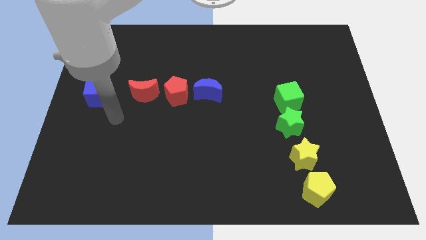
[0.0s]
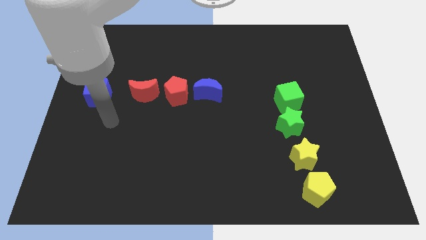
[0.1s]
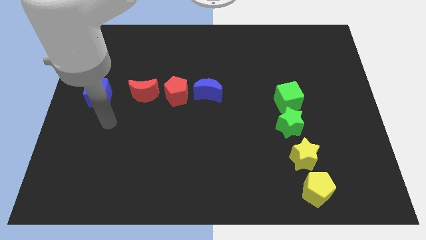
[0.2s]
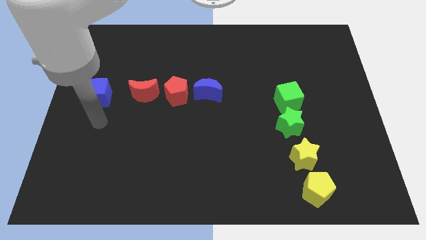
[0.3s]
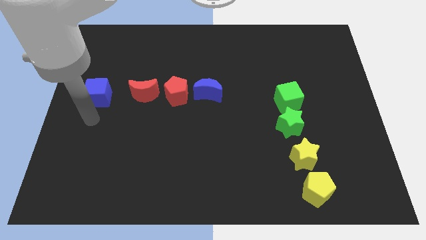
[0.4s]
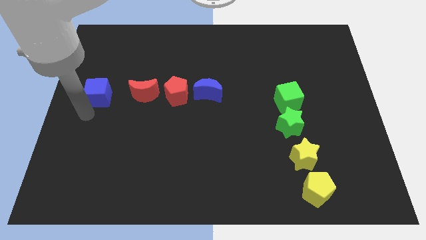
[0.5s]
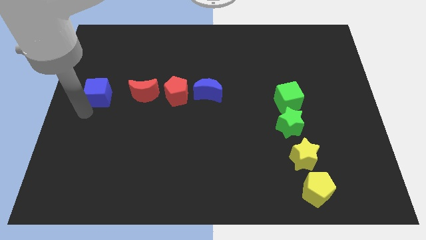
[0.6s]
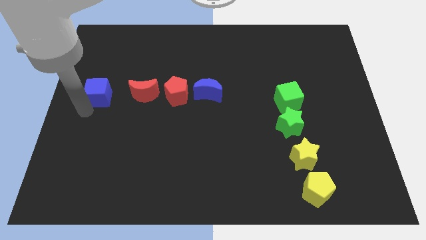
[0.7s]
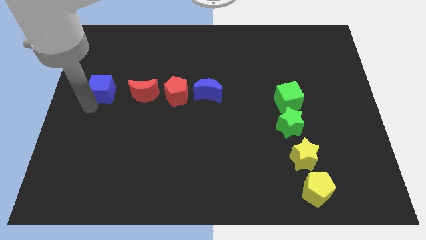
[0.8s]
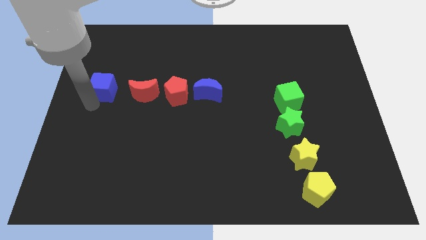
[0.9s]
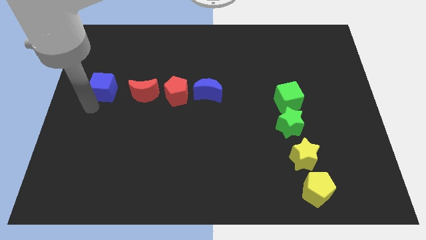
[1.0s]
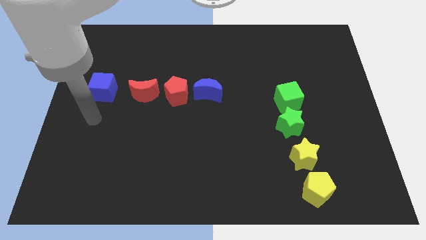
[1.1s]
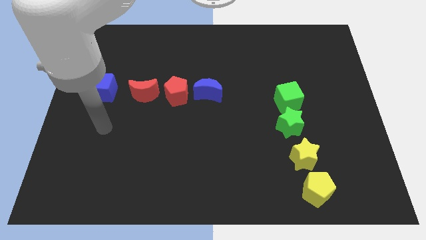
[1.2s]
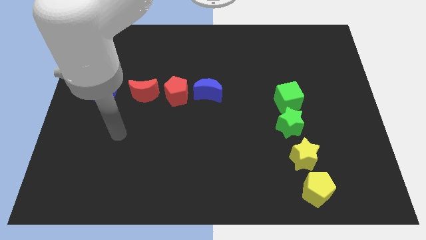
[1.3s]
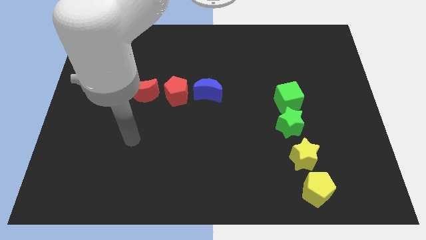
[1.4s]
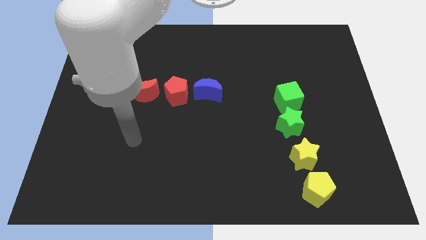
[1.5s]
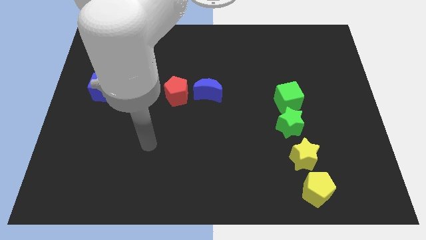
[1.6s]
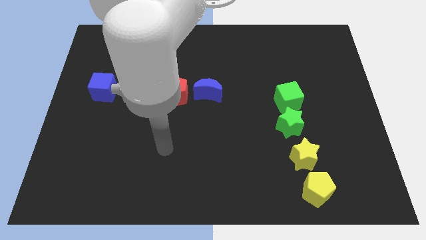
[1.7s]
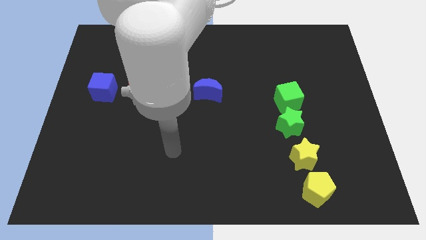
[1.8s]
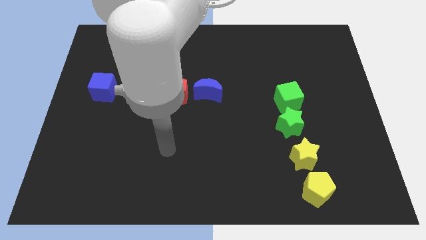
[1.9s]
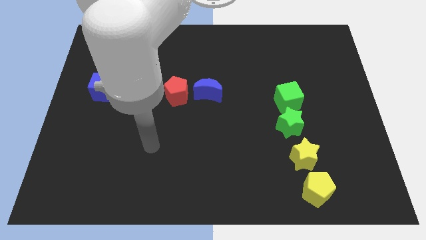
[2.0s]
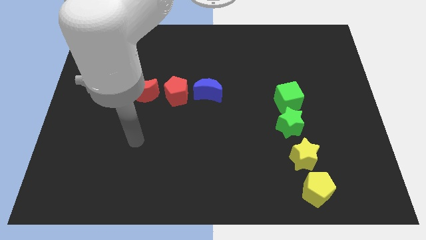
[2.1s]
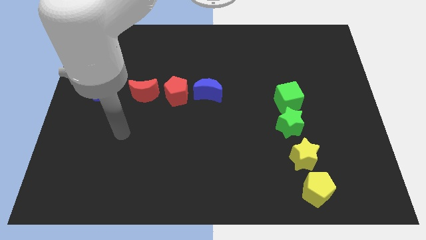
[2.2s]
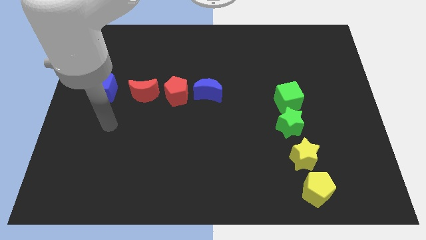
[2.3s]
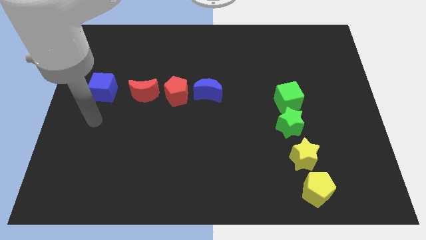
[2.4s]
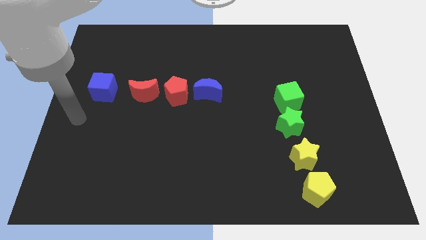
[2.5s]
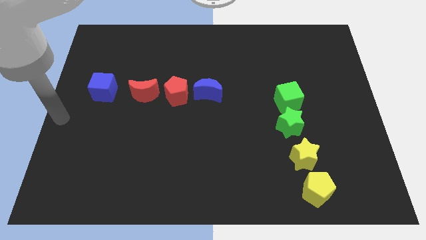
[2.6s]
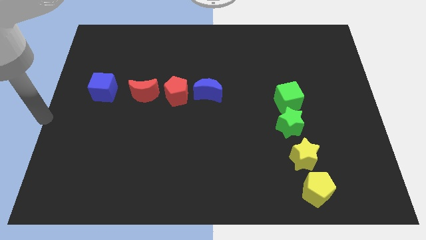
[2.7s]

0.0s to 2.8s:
tap the blue cube

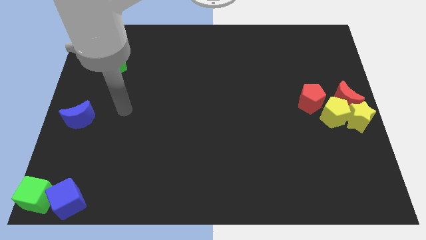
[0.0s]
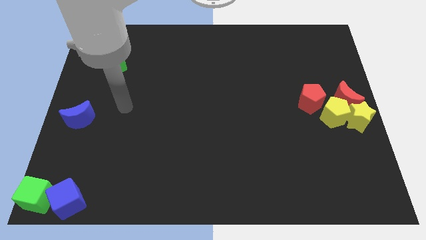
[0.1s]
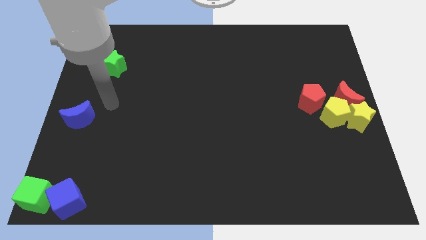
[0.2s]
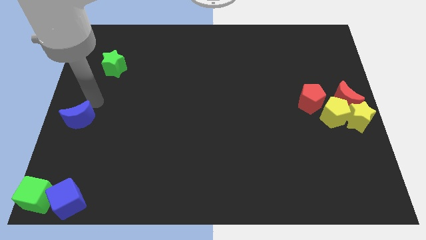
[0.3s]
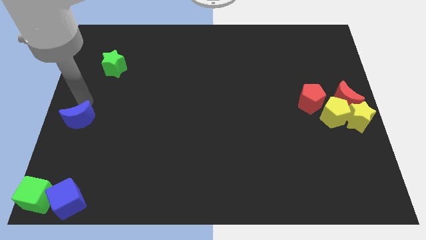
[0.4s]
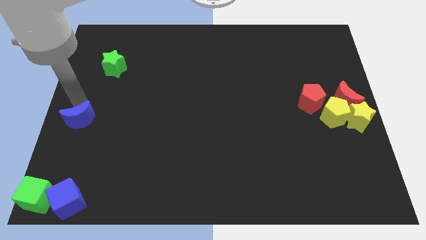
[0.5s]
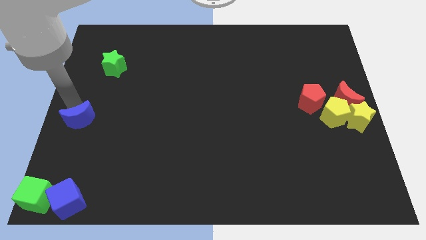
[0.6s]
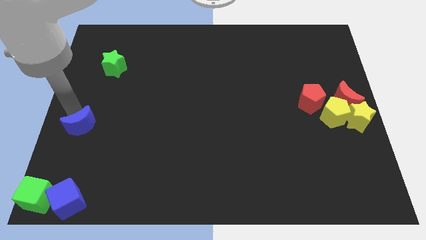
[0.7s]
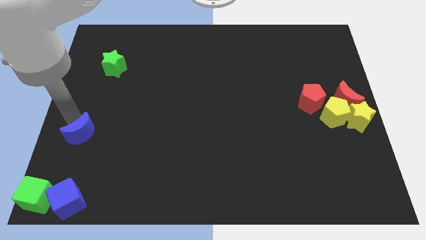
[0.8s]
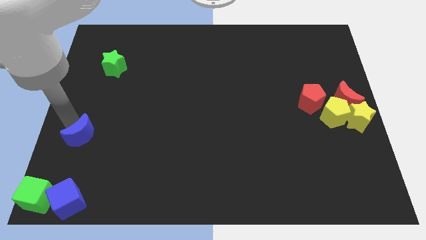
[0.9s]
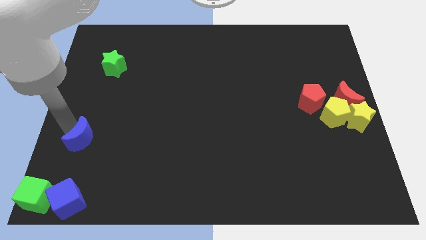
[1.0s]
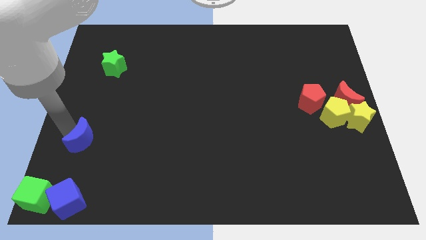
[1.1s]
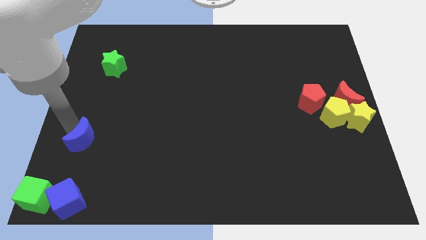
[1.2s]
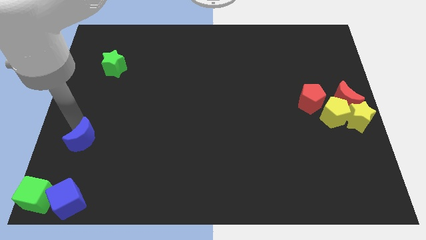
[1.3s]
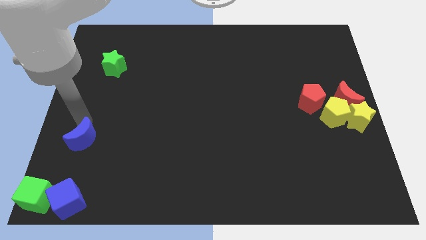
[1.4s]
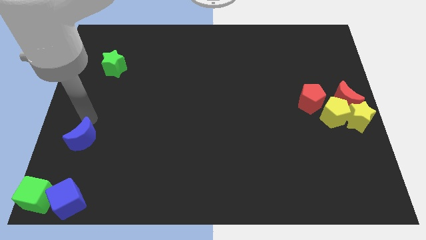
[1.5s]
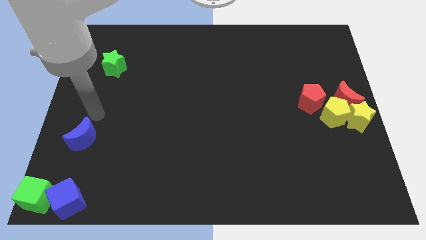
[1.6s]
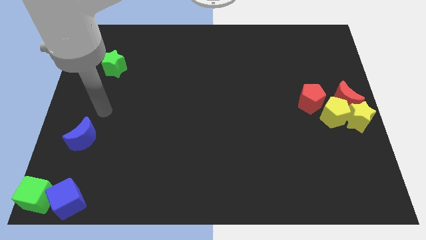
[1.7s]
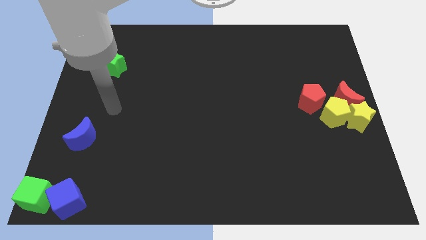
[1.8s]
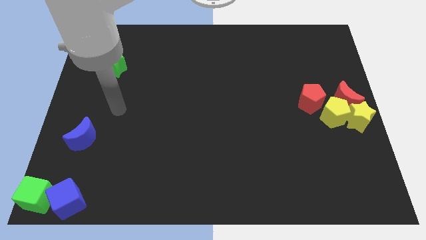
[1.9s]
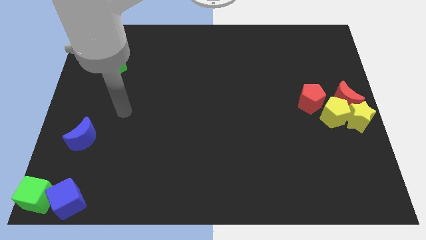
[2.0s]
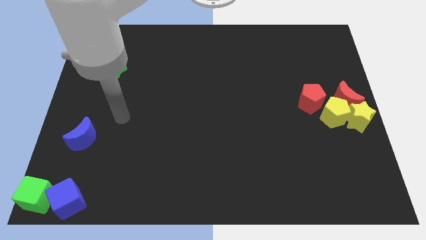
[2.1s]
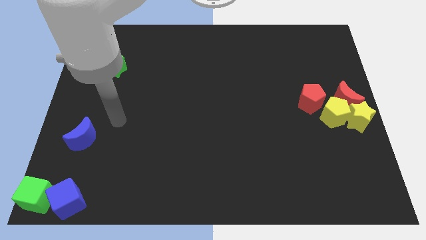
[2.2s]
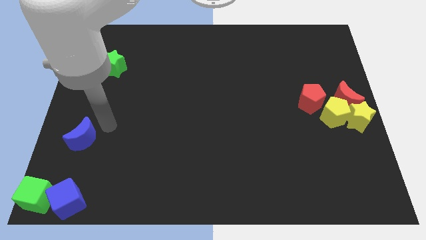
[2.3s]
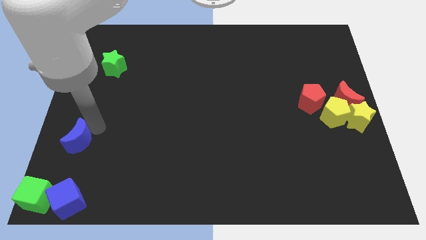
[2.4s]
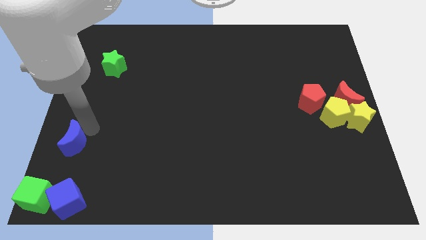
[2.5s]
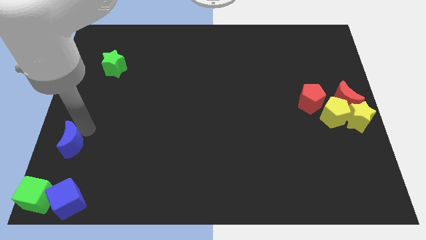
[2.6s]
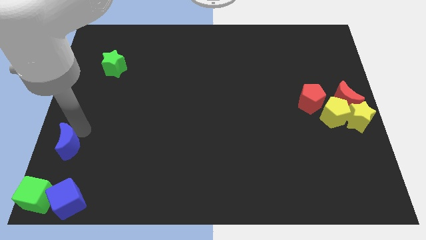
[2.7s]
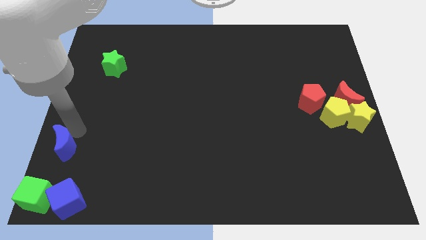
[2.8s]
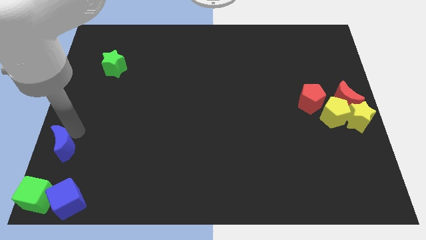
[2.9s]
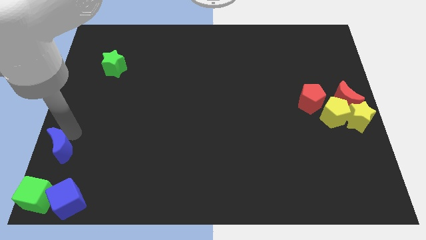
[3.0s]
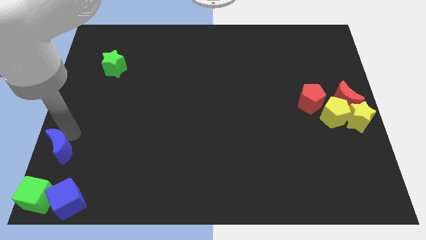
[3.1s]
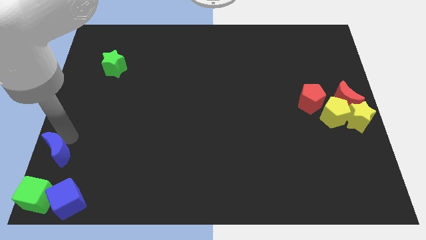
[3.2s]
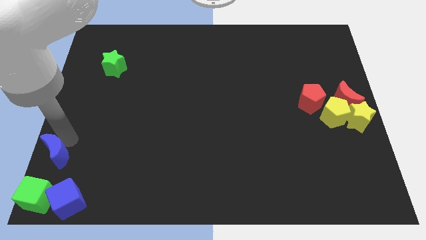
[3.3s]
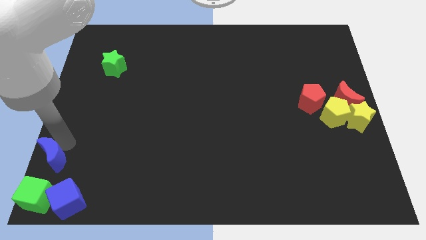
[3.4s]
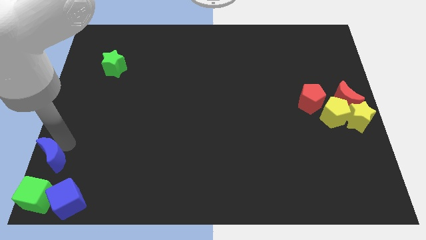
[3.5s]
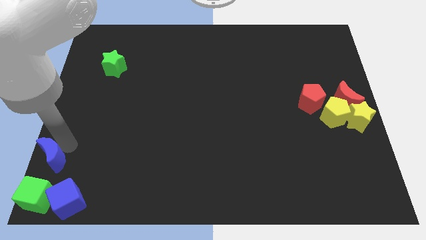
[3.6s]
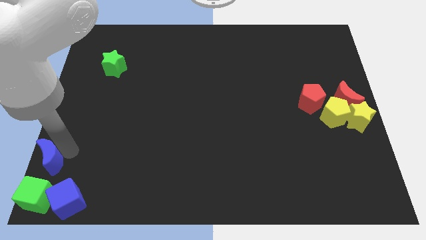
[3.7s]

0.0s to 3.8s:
slide the blue moon above the green cube

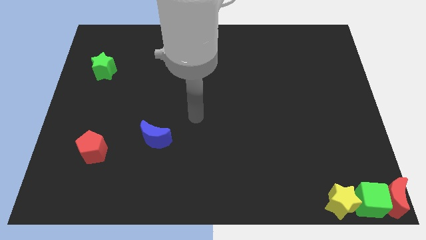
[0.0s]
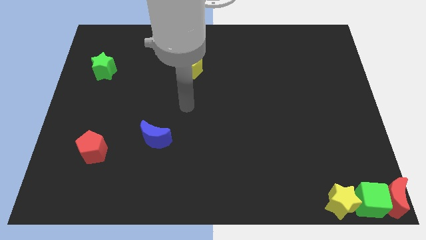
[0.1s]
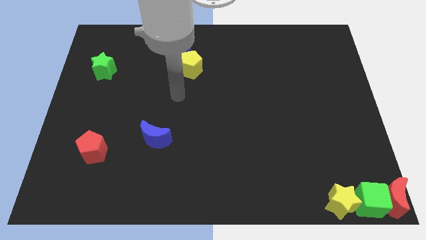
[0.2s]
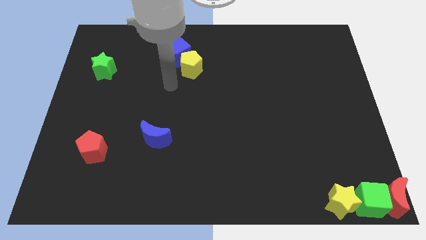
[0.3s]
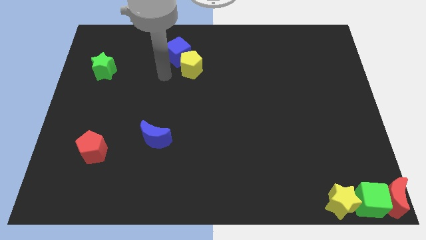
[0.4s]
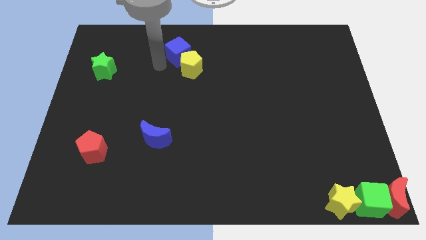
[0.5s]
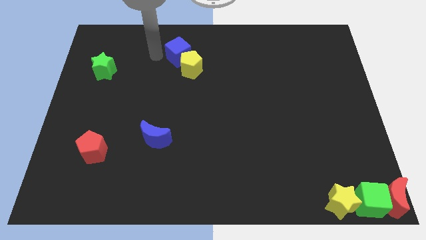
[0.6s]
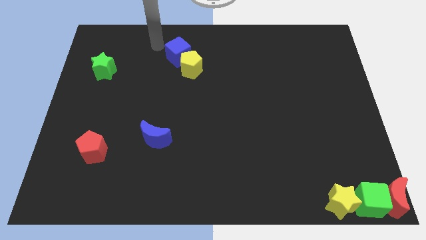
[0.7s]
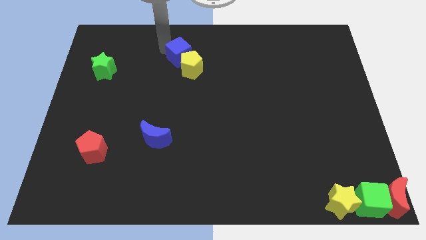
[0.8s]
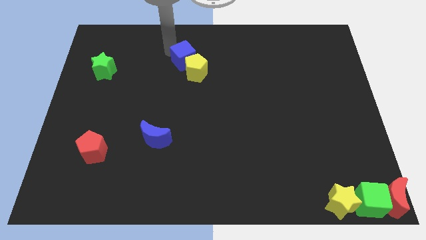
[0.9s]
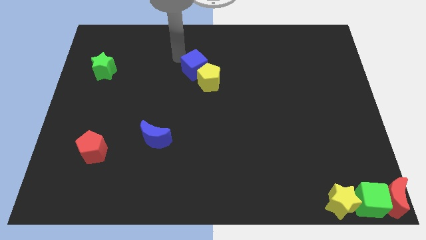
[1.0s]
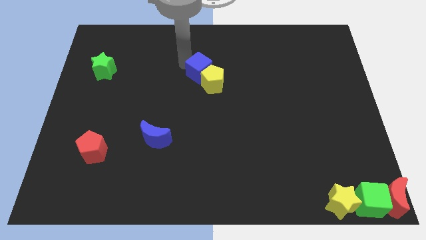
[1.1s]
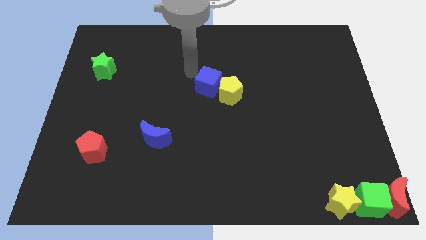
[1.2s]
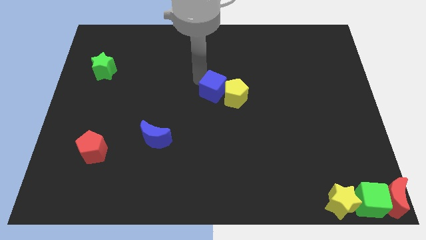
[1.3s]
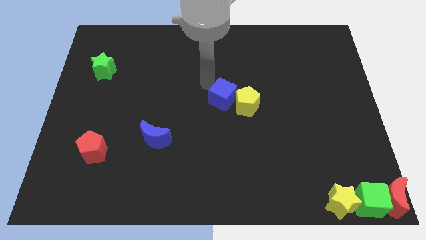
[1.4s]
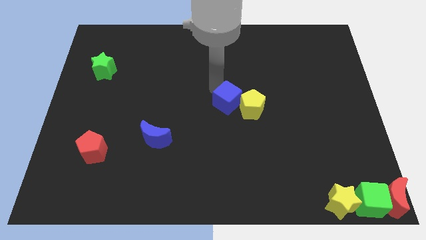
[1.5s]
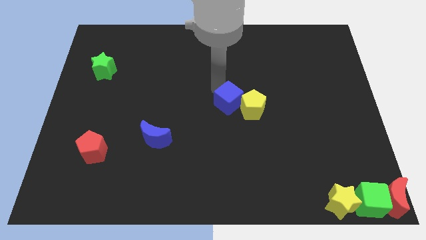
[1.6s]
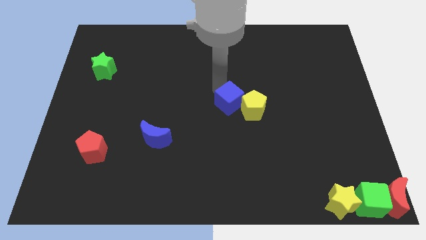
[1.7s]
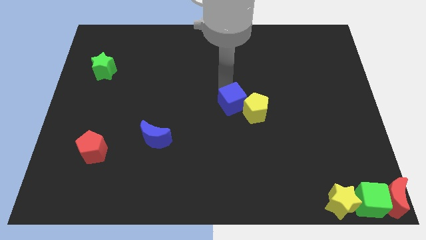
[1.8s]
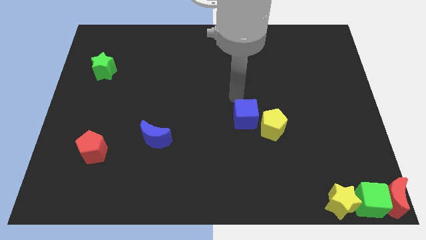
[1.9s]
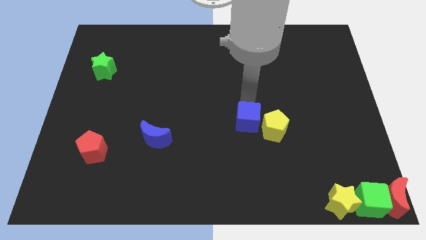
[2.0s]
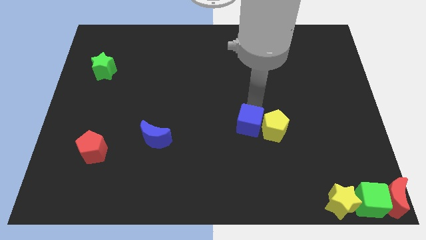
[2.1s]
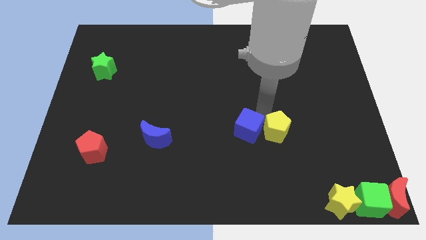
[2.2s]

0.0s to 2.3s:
move the blue cube and yellow pentagon to the horizontal right of the blue moon

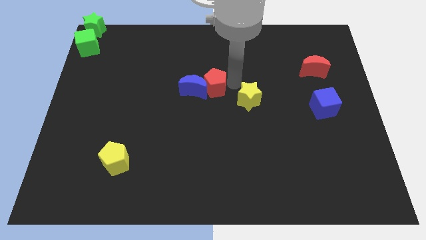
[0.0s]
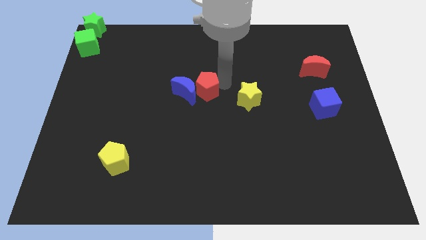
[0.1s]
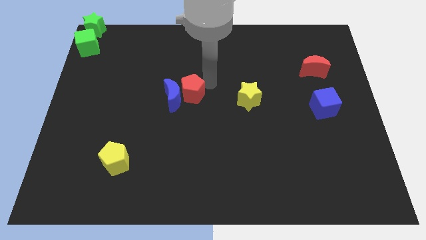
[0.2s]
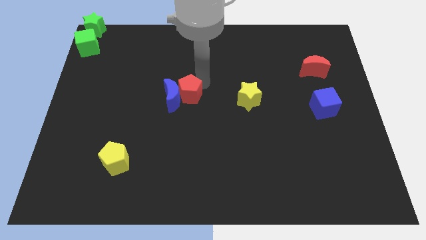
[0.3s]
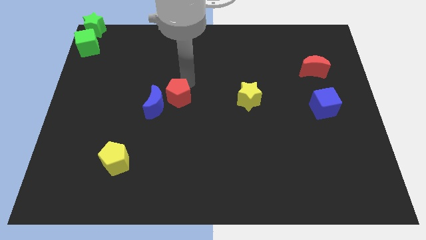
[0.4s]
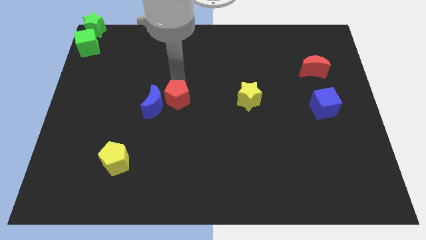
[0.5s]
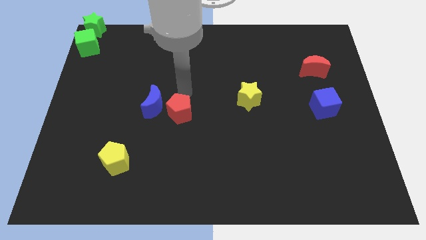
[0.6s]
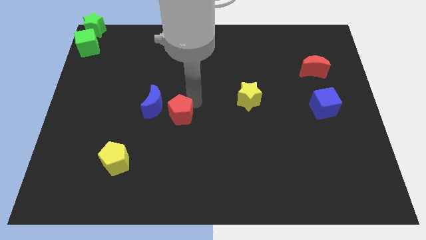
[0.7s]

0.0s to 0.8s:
slightly push the red pentagon along with blue crescent to the left side
